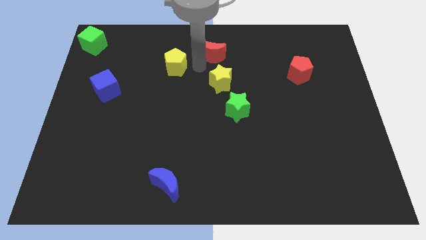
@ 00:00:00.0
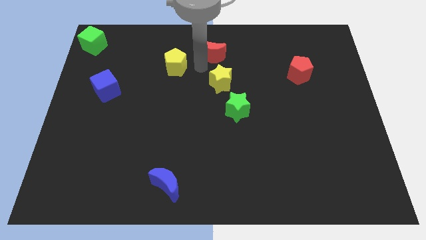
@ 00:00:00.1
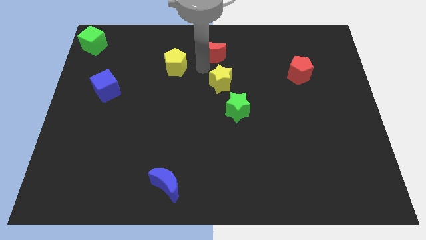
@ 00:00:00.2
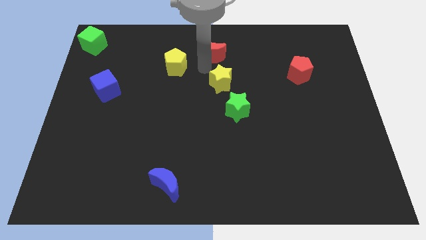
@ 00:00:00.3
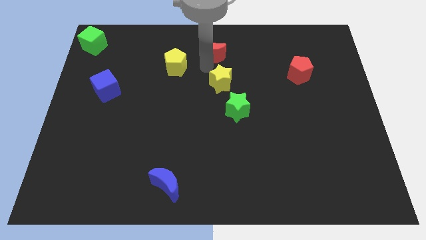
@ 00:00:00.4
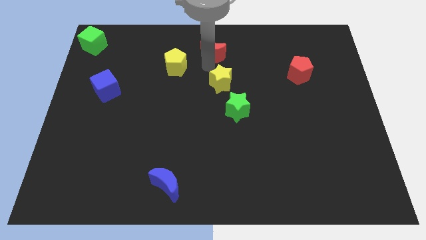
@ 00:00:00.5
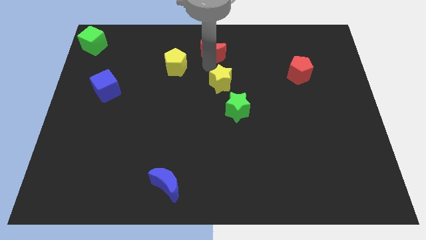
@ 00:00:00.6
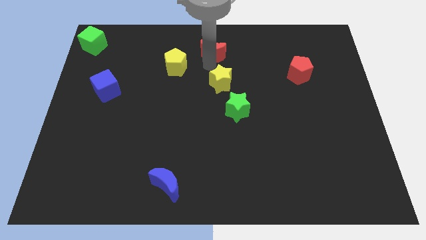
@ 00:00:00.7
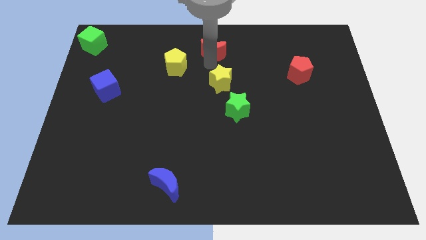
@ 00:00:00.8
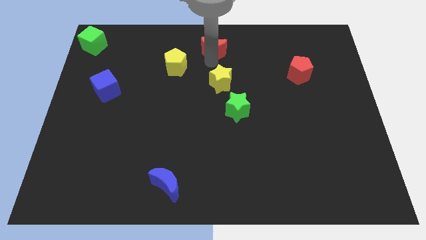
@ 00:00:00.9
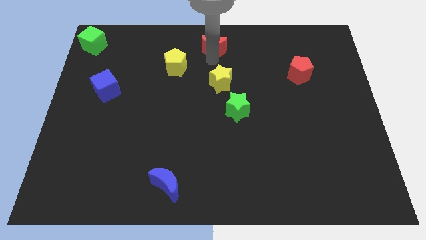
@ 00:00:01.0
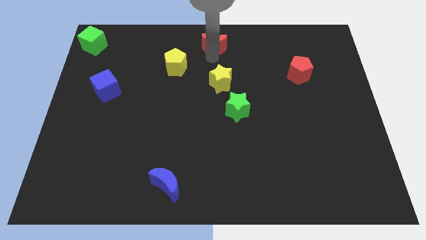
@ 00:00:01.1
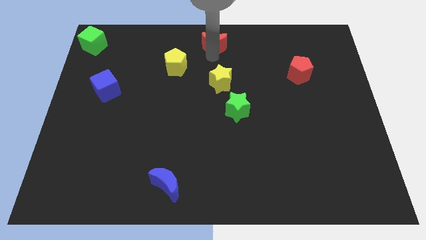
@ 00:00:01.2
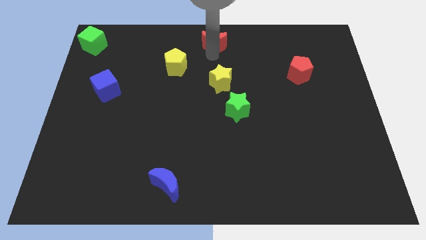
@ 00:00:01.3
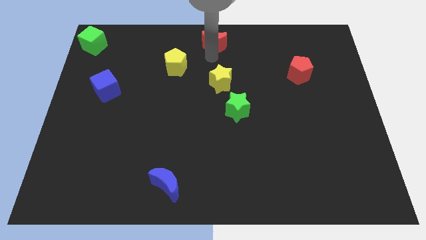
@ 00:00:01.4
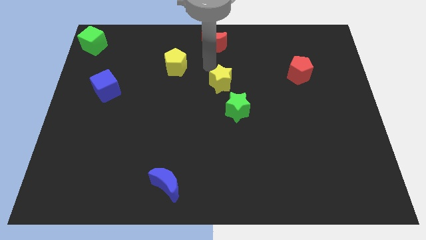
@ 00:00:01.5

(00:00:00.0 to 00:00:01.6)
move the red moon towards the top center of the board

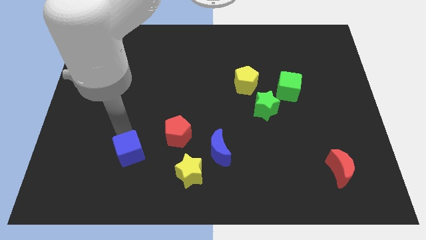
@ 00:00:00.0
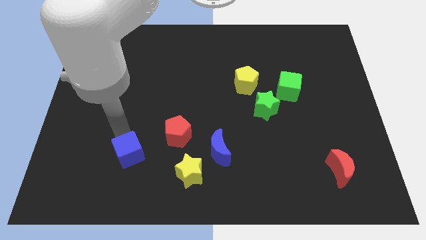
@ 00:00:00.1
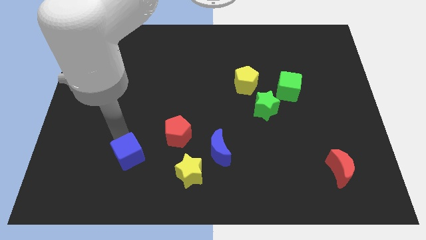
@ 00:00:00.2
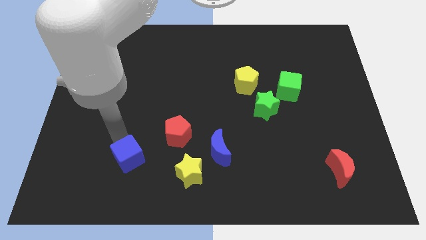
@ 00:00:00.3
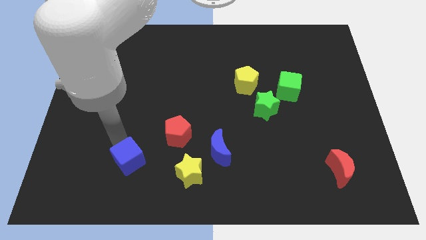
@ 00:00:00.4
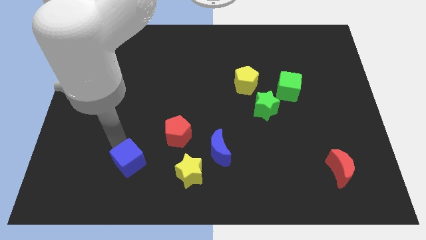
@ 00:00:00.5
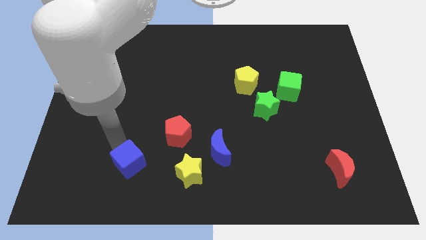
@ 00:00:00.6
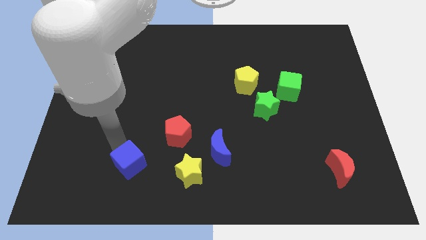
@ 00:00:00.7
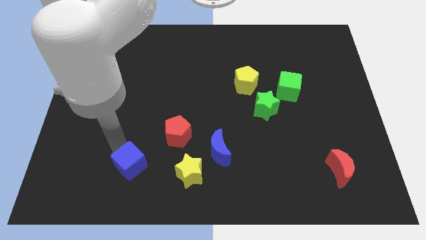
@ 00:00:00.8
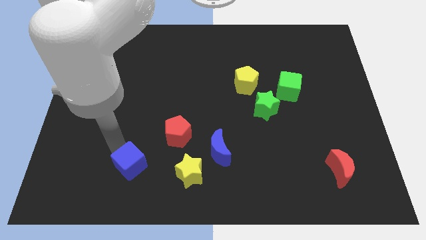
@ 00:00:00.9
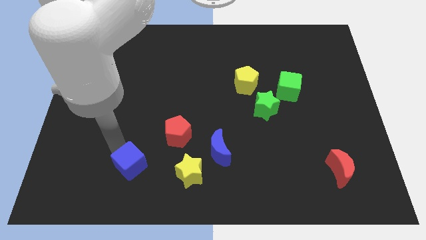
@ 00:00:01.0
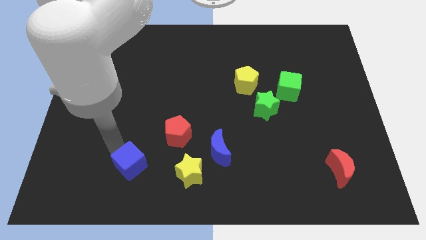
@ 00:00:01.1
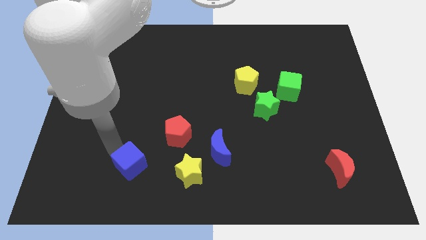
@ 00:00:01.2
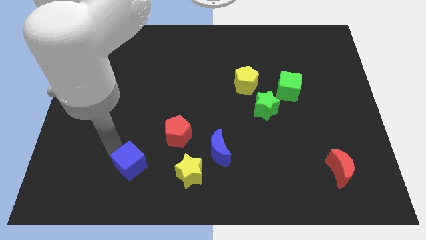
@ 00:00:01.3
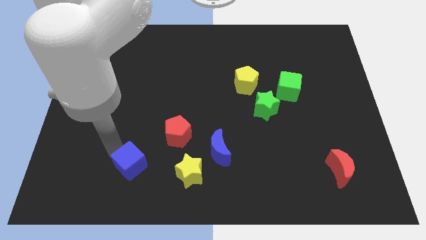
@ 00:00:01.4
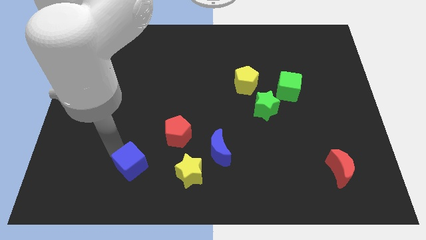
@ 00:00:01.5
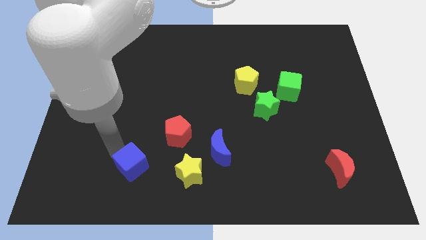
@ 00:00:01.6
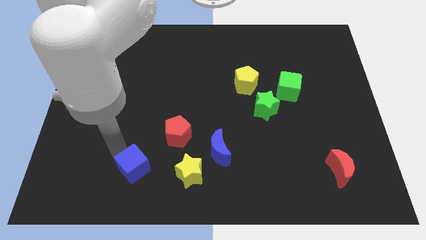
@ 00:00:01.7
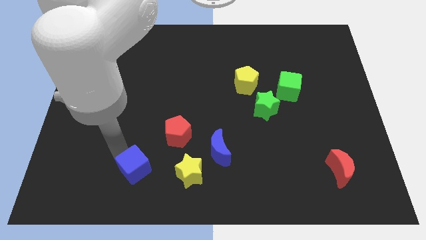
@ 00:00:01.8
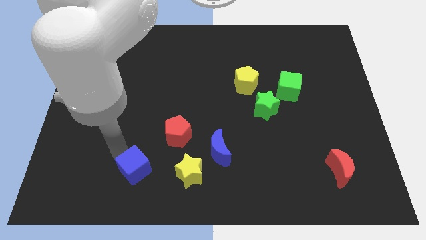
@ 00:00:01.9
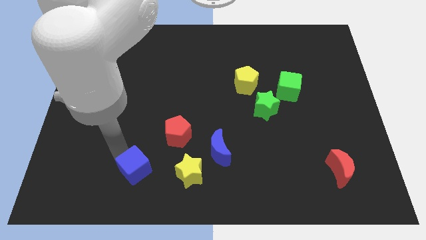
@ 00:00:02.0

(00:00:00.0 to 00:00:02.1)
make a triangle by moving blue cube

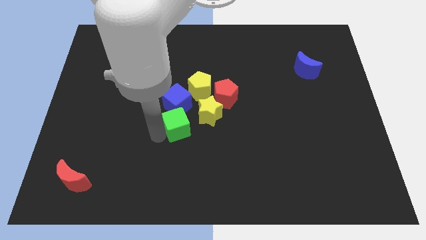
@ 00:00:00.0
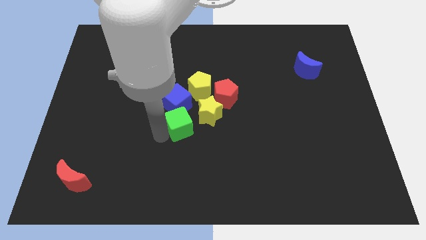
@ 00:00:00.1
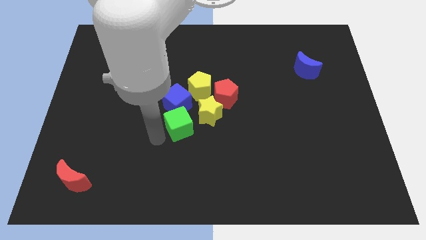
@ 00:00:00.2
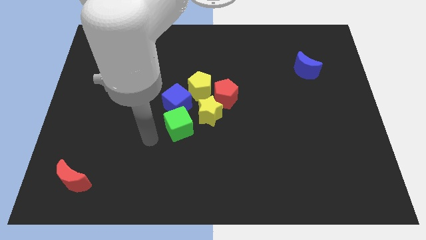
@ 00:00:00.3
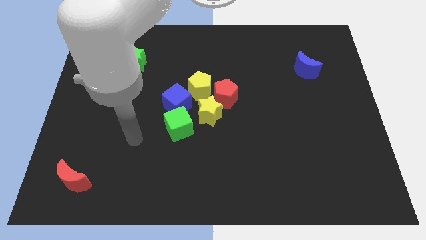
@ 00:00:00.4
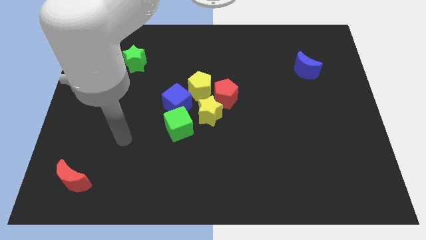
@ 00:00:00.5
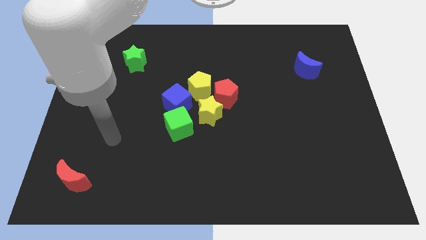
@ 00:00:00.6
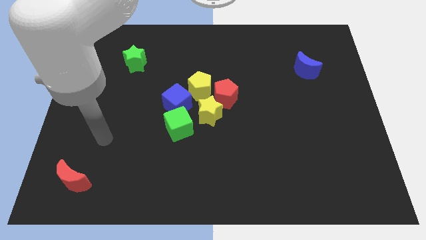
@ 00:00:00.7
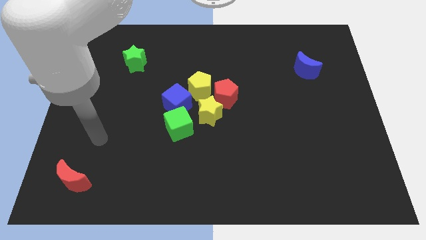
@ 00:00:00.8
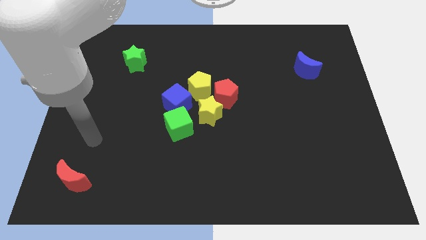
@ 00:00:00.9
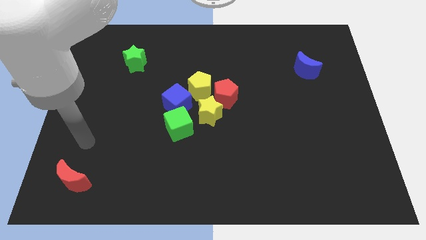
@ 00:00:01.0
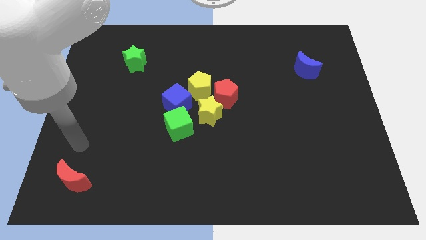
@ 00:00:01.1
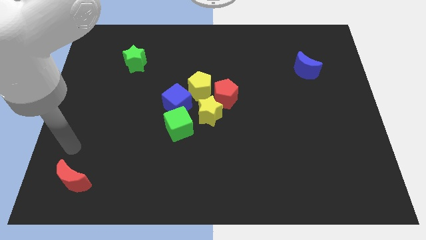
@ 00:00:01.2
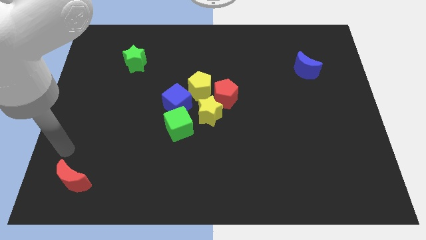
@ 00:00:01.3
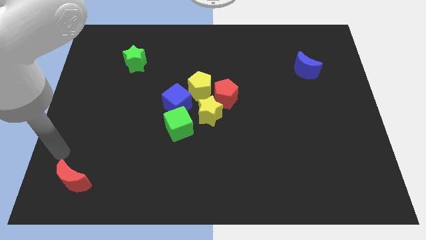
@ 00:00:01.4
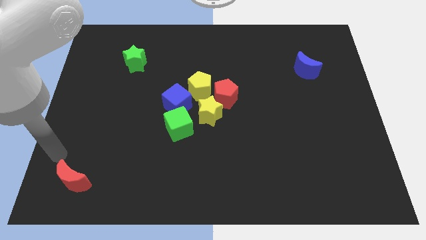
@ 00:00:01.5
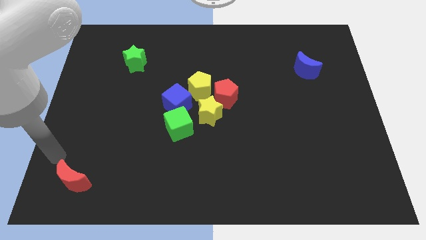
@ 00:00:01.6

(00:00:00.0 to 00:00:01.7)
move your arm towards red crescent

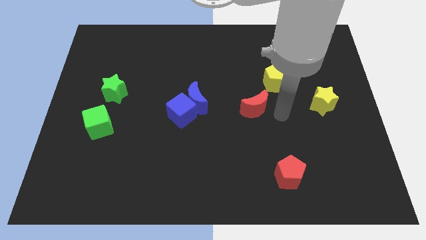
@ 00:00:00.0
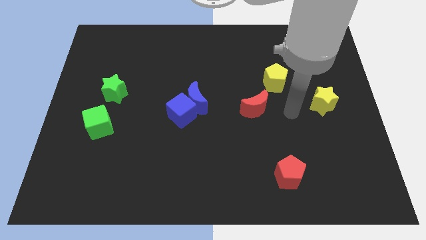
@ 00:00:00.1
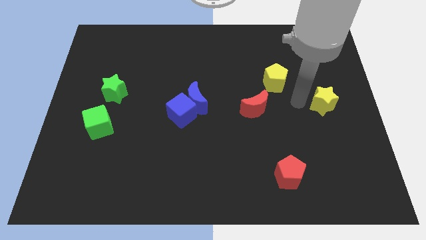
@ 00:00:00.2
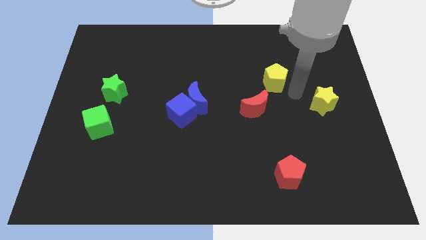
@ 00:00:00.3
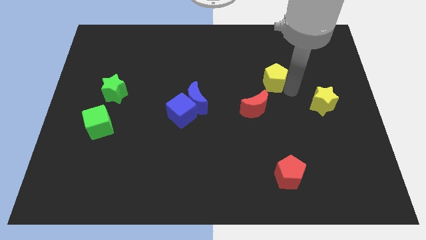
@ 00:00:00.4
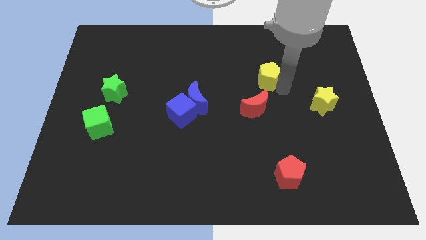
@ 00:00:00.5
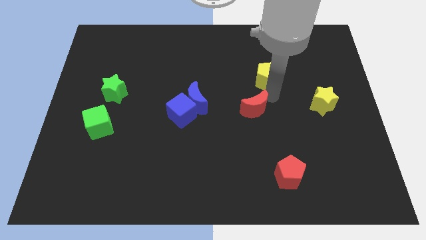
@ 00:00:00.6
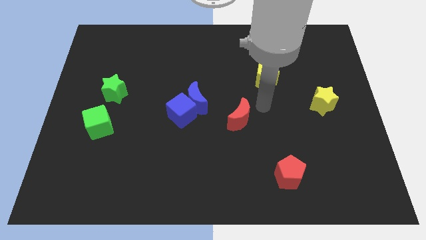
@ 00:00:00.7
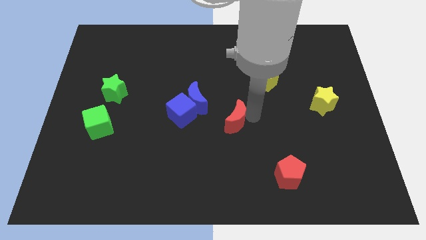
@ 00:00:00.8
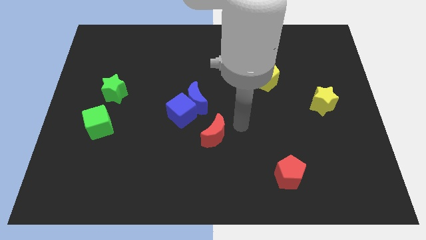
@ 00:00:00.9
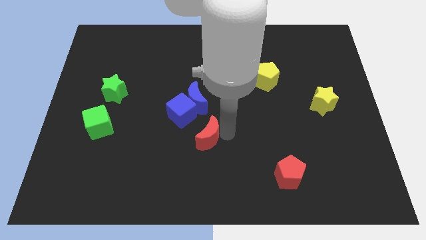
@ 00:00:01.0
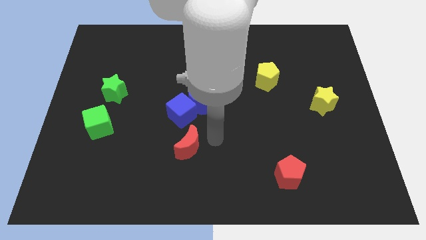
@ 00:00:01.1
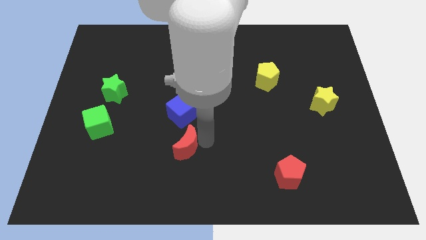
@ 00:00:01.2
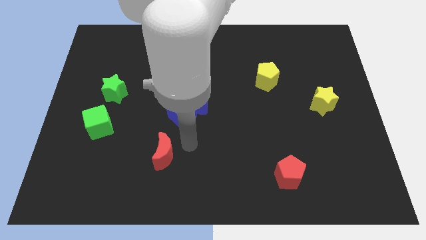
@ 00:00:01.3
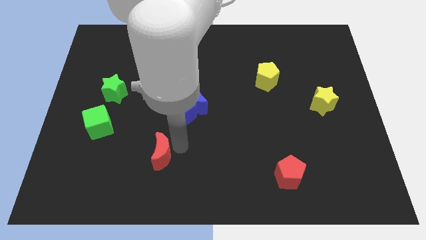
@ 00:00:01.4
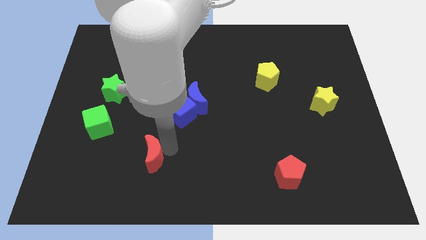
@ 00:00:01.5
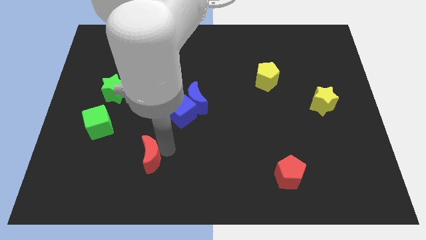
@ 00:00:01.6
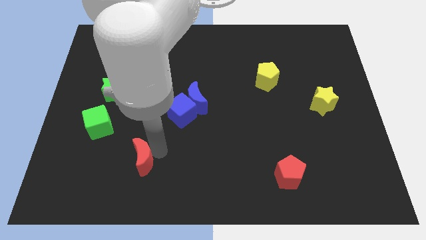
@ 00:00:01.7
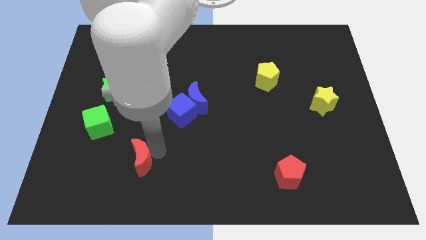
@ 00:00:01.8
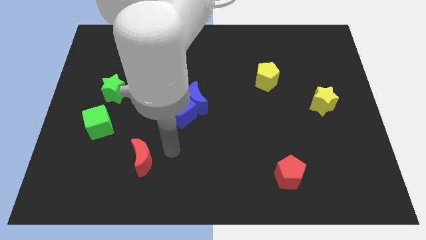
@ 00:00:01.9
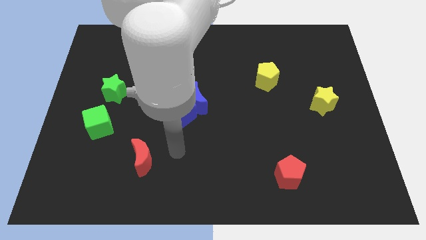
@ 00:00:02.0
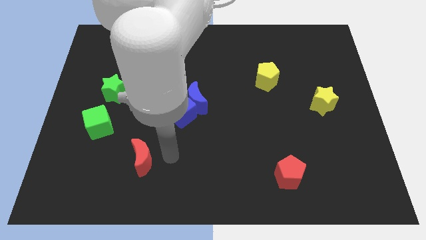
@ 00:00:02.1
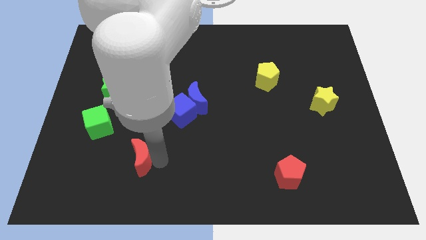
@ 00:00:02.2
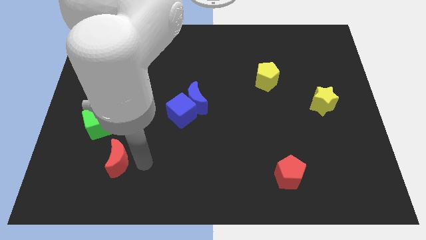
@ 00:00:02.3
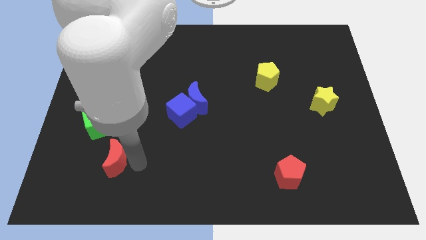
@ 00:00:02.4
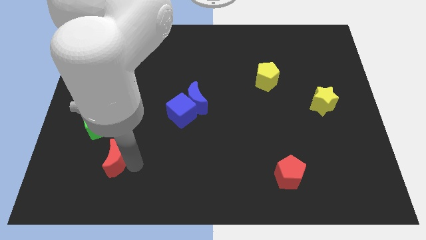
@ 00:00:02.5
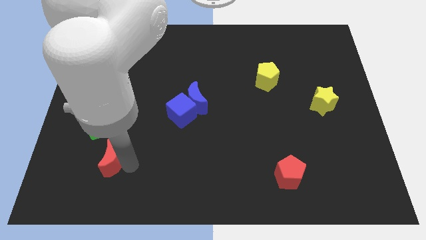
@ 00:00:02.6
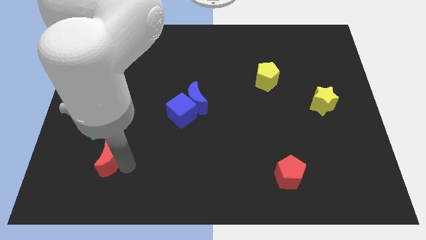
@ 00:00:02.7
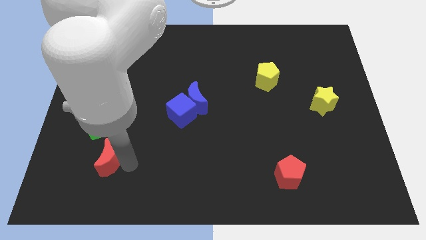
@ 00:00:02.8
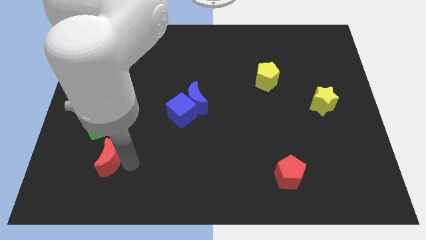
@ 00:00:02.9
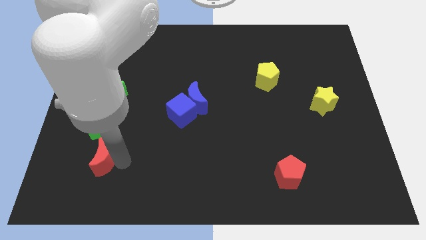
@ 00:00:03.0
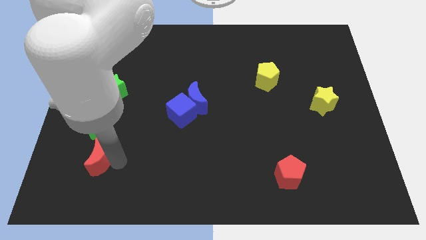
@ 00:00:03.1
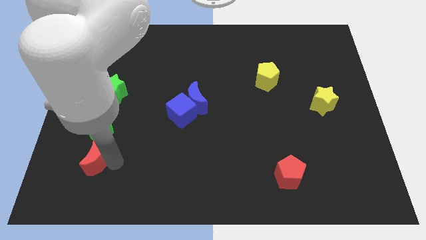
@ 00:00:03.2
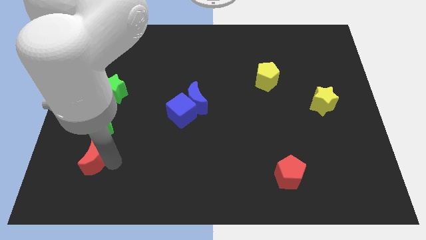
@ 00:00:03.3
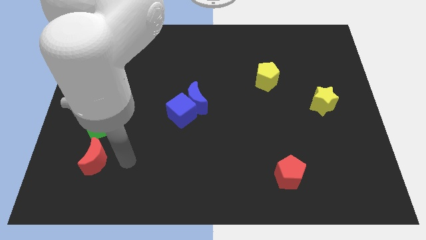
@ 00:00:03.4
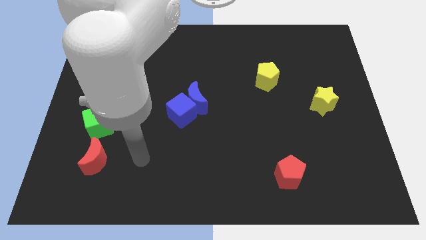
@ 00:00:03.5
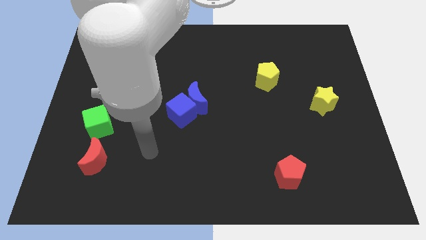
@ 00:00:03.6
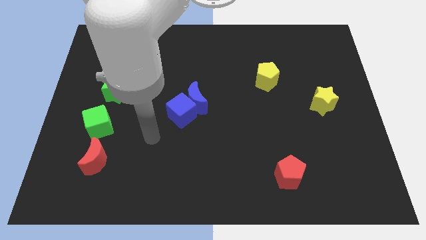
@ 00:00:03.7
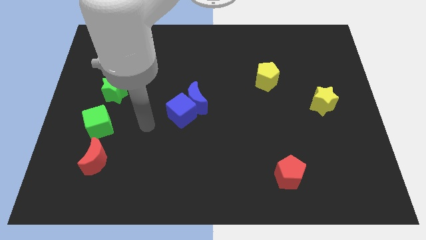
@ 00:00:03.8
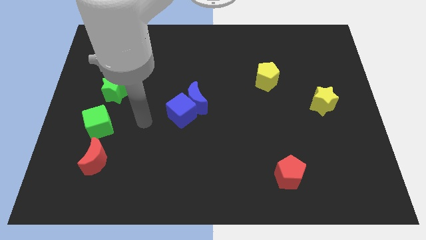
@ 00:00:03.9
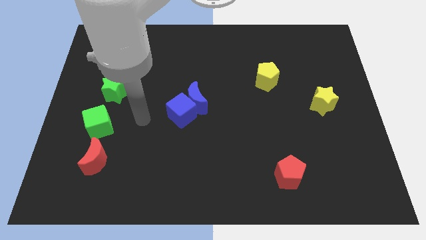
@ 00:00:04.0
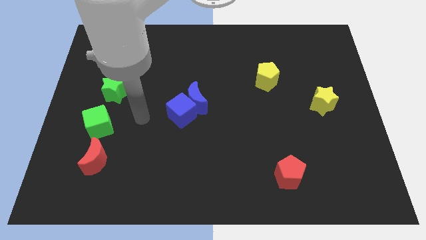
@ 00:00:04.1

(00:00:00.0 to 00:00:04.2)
place red moon below green cube
